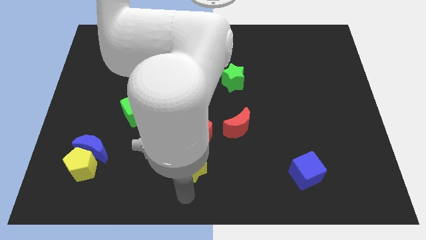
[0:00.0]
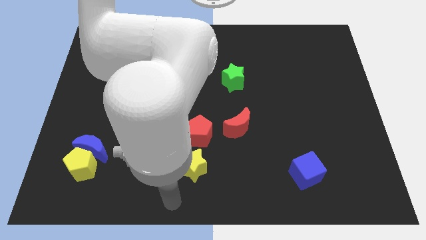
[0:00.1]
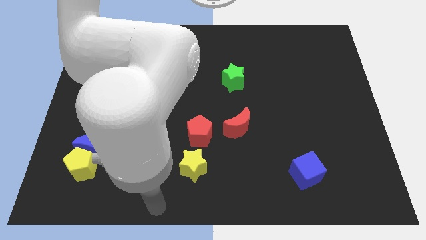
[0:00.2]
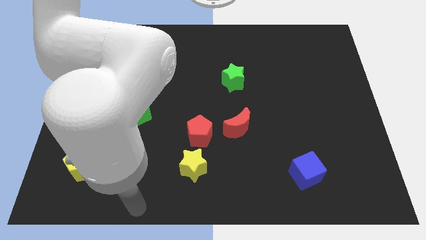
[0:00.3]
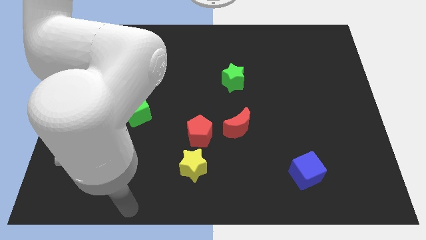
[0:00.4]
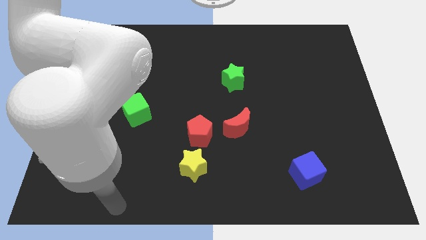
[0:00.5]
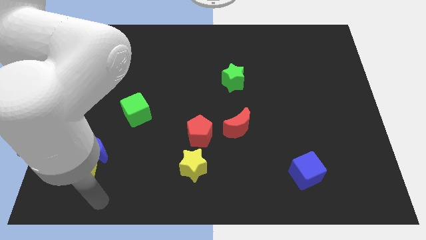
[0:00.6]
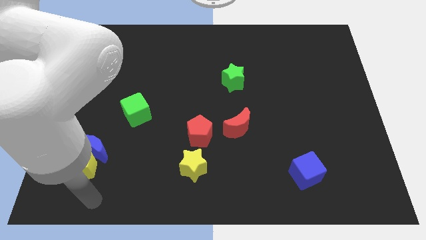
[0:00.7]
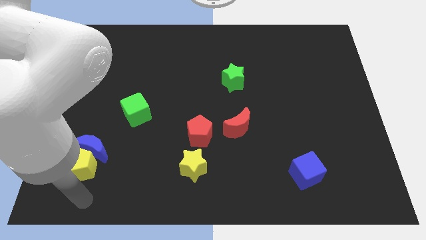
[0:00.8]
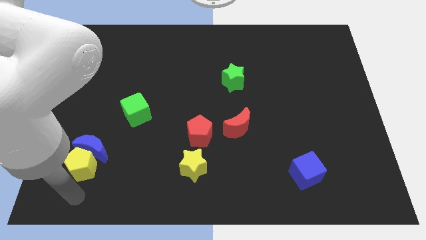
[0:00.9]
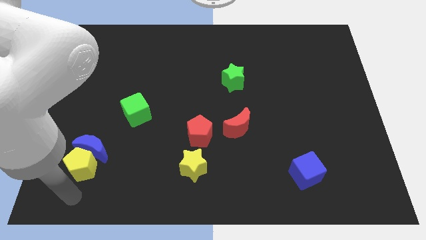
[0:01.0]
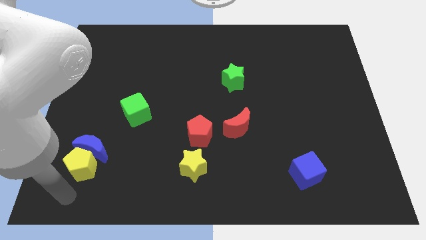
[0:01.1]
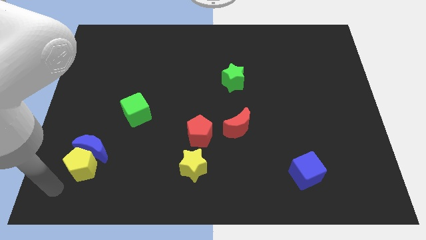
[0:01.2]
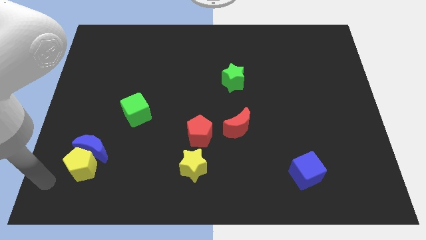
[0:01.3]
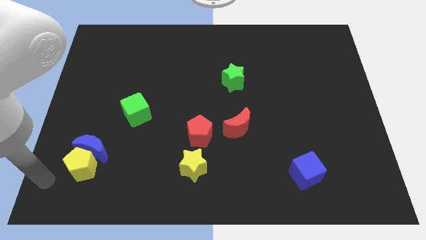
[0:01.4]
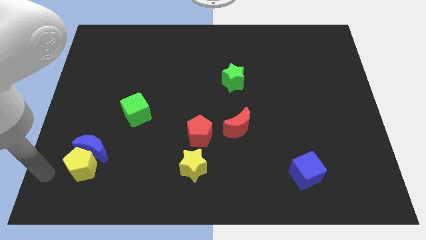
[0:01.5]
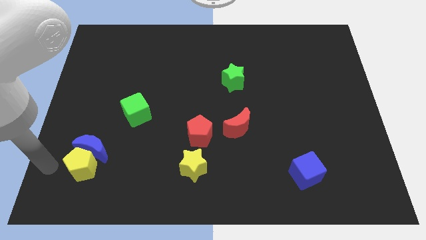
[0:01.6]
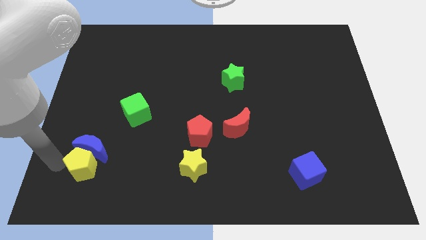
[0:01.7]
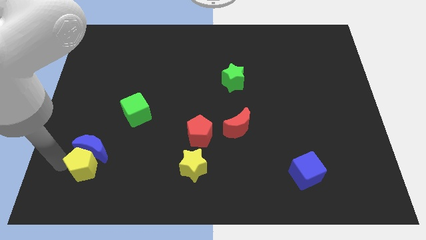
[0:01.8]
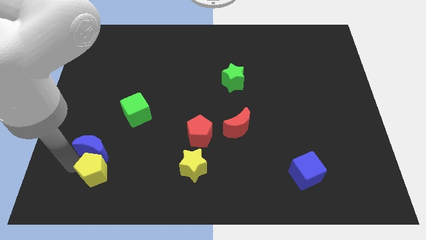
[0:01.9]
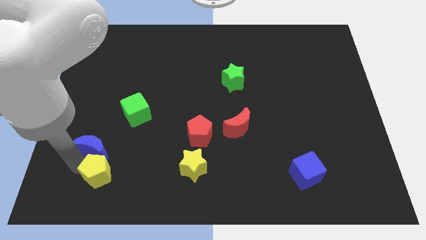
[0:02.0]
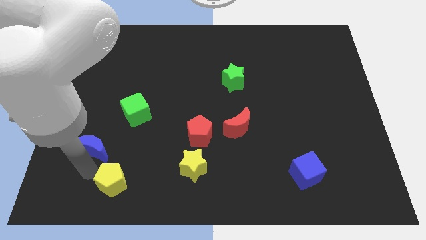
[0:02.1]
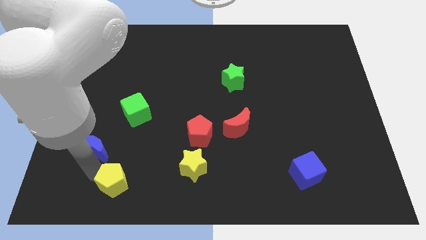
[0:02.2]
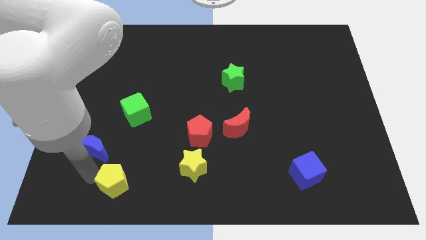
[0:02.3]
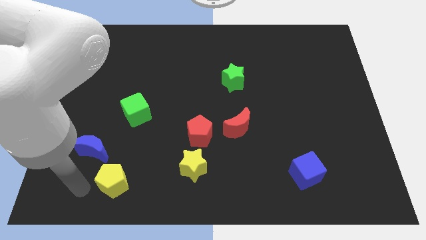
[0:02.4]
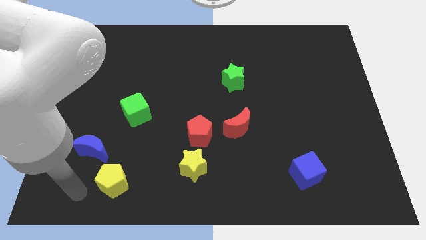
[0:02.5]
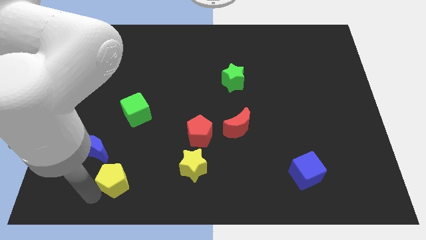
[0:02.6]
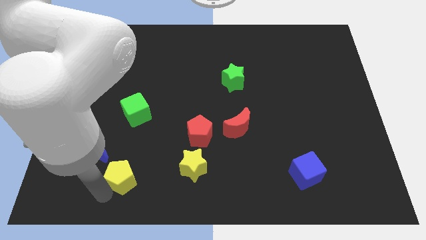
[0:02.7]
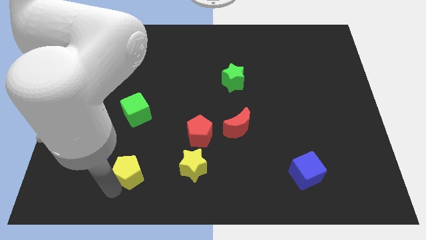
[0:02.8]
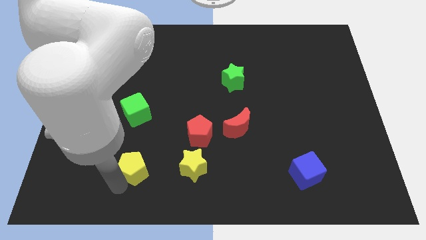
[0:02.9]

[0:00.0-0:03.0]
put the yellow pentagon vertically below the green cube

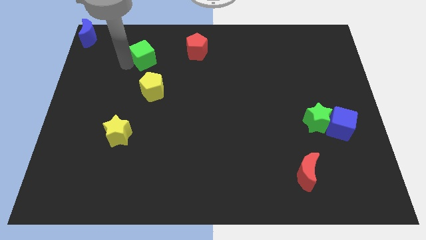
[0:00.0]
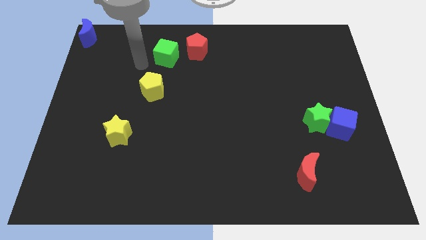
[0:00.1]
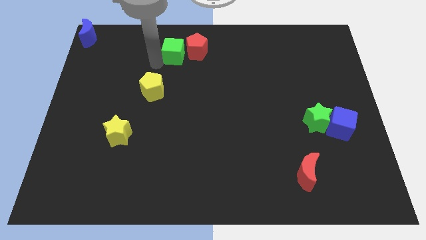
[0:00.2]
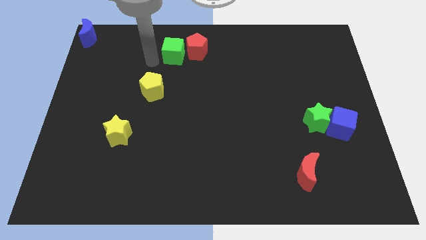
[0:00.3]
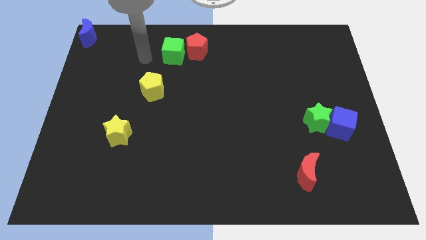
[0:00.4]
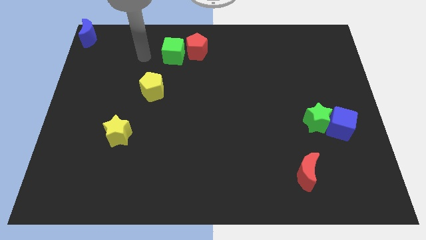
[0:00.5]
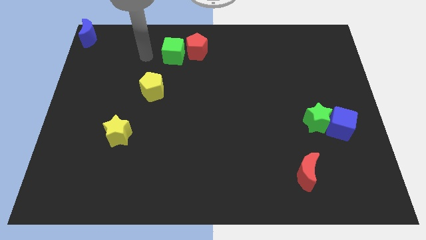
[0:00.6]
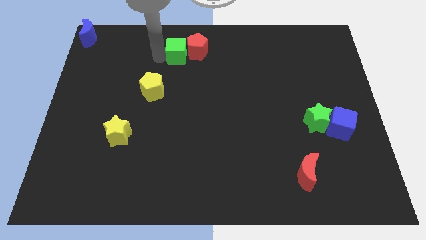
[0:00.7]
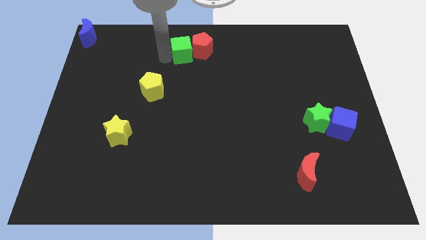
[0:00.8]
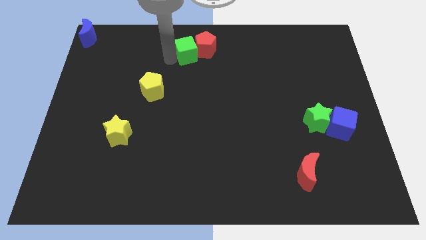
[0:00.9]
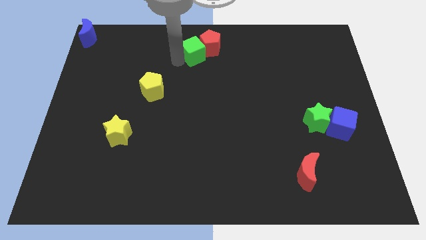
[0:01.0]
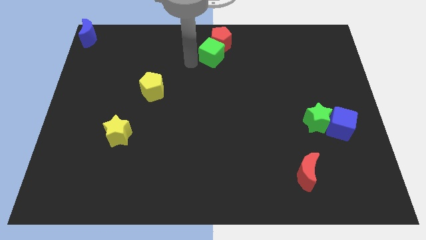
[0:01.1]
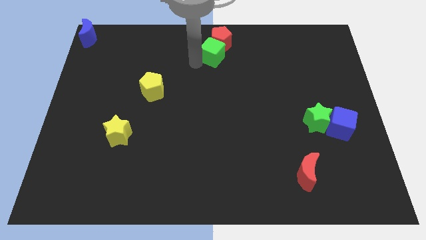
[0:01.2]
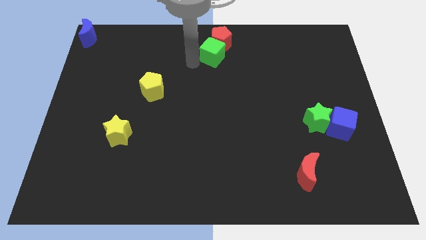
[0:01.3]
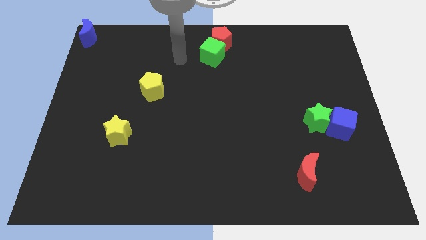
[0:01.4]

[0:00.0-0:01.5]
move the green cube into the red pentagon

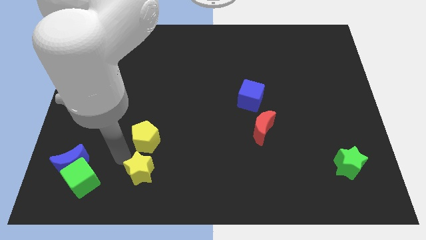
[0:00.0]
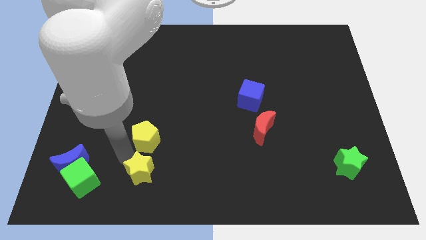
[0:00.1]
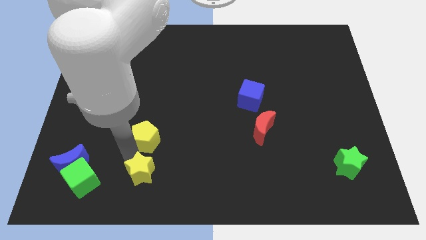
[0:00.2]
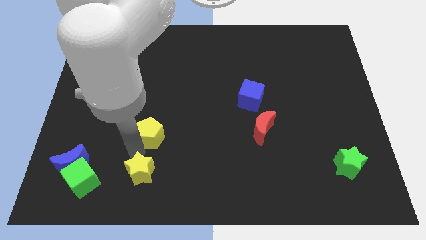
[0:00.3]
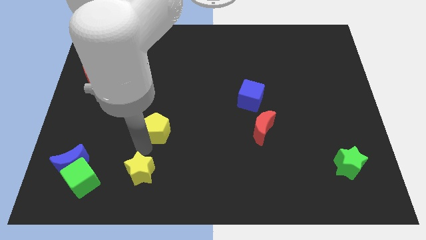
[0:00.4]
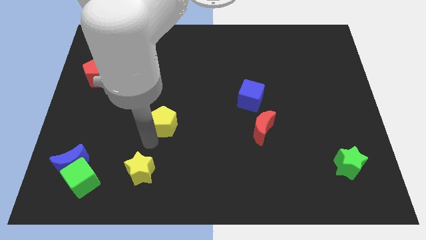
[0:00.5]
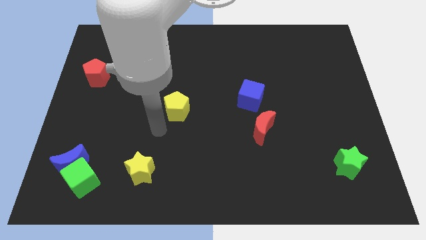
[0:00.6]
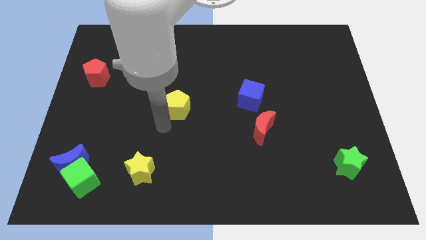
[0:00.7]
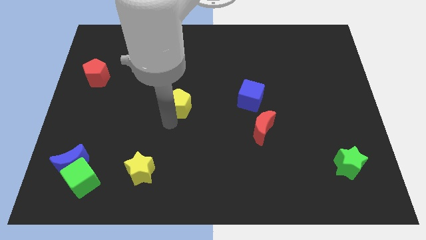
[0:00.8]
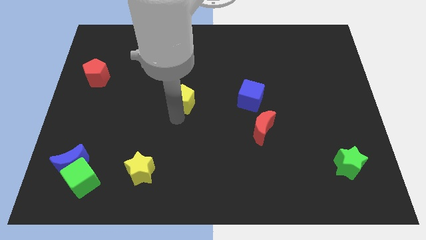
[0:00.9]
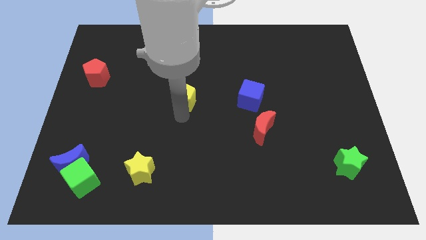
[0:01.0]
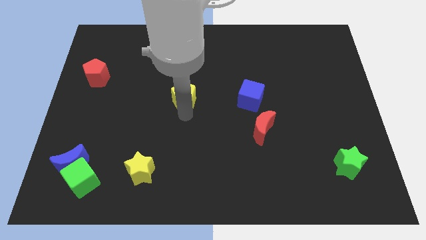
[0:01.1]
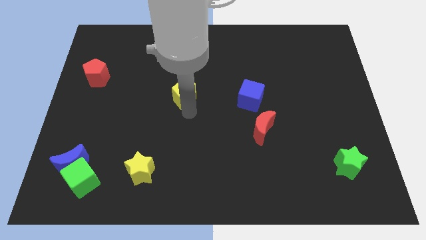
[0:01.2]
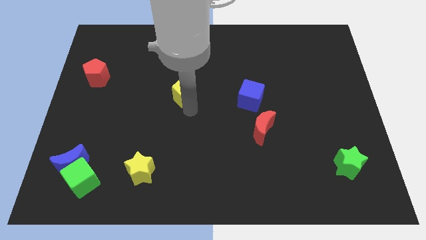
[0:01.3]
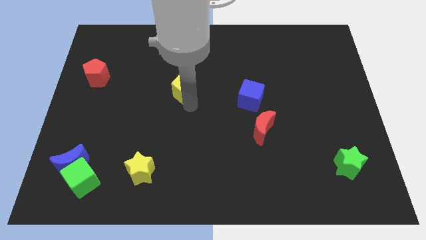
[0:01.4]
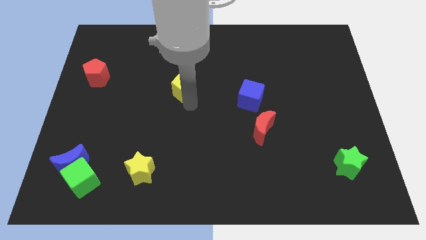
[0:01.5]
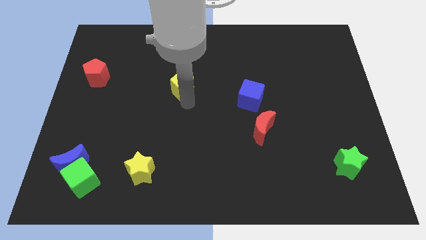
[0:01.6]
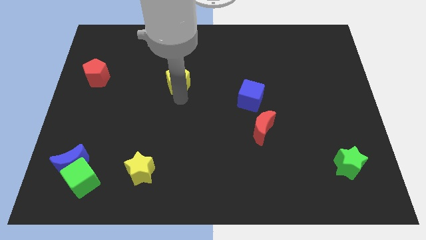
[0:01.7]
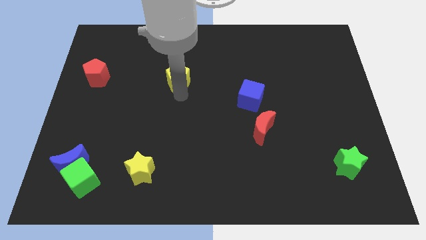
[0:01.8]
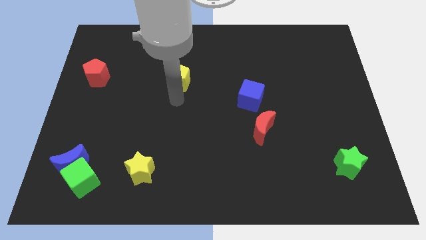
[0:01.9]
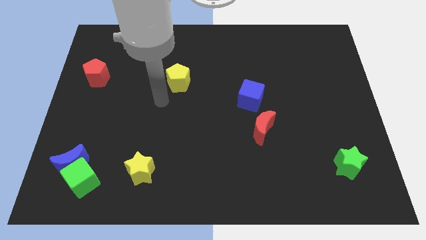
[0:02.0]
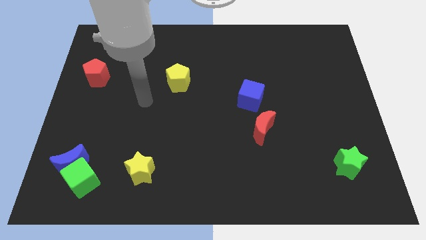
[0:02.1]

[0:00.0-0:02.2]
move the yellow pentagon towards the top center

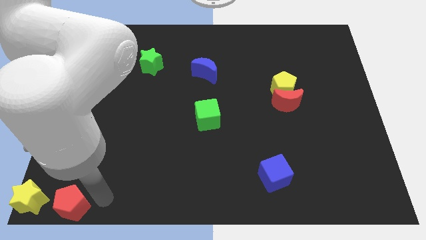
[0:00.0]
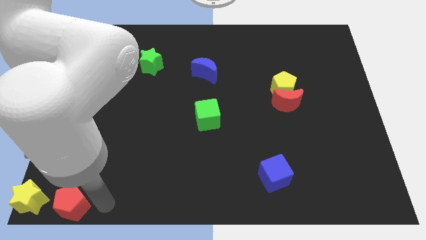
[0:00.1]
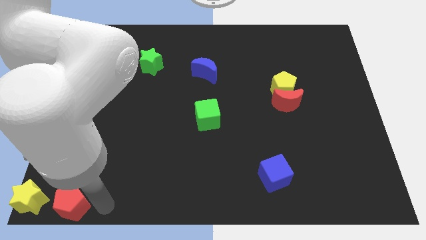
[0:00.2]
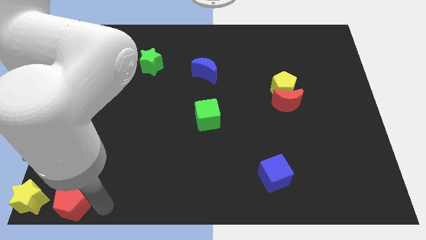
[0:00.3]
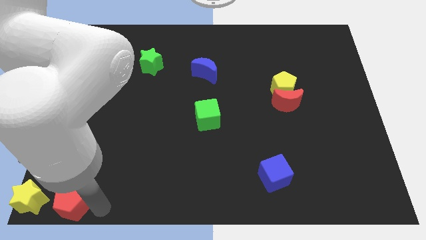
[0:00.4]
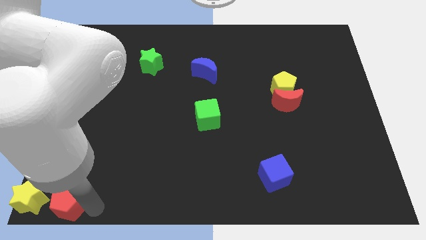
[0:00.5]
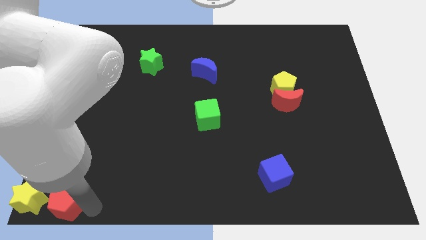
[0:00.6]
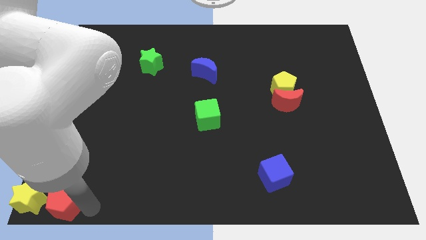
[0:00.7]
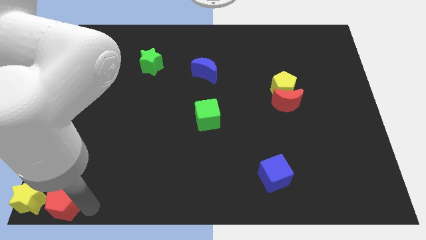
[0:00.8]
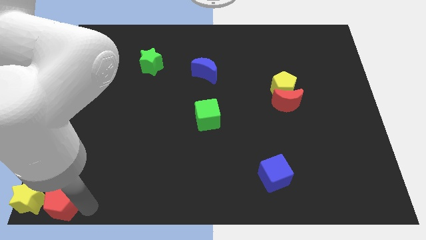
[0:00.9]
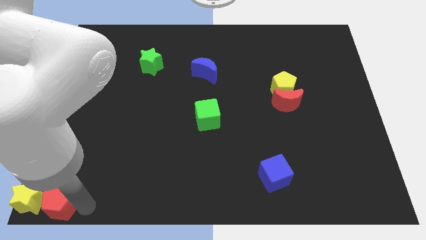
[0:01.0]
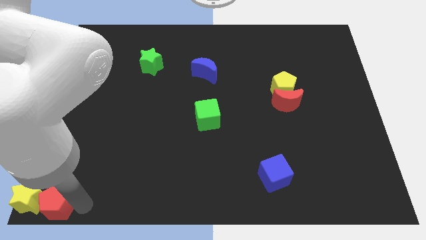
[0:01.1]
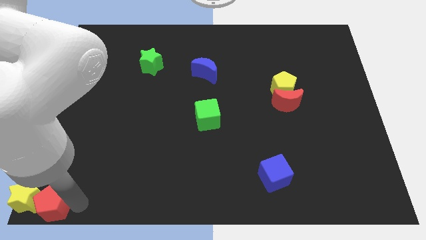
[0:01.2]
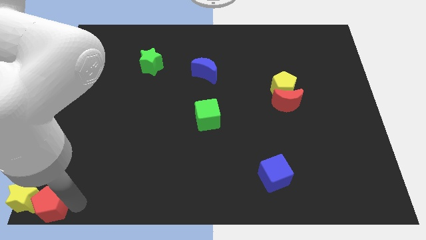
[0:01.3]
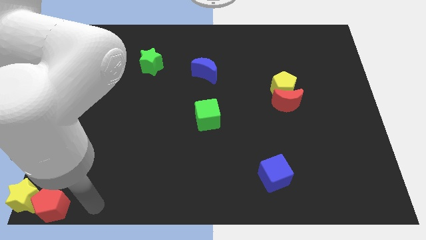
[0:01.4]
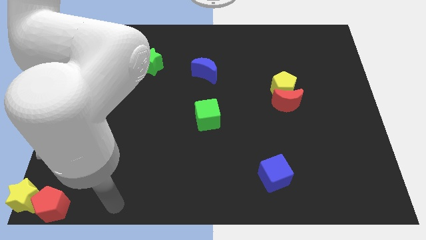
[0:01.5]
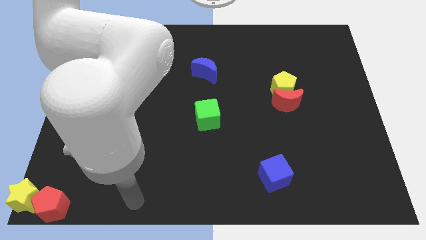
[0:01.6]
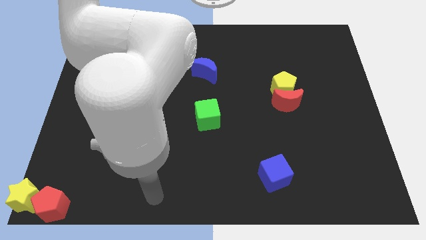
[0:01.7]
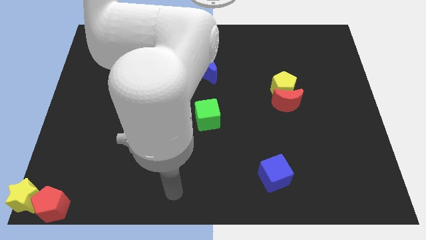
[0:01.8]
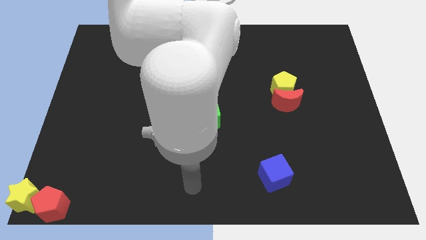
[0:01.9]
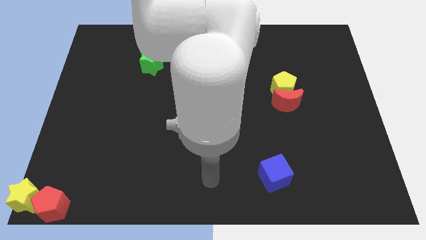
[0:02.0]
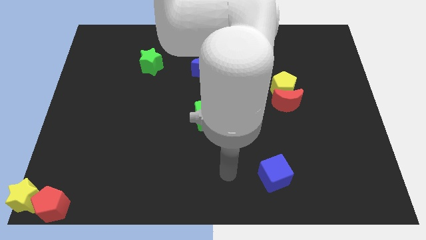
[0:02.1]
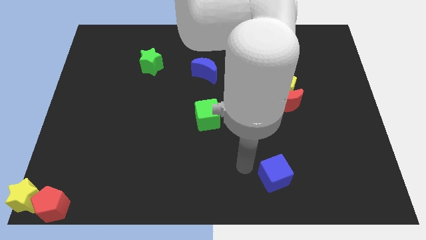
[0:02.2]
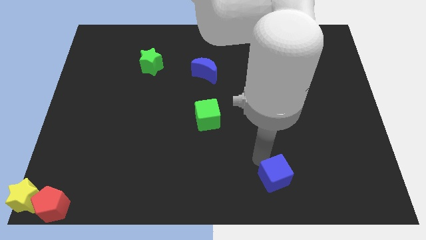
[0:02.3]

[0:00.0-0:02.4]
push the red pentagon into the yellow star
